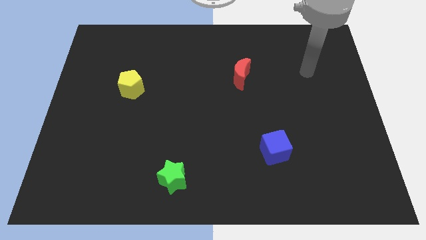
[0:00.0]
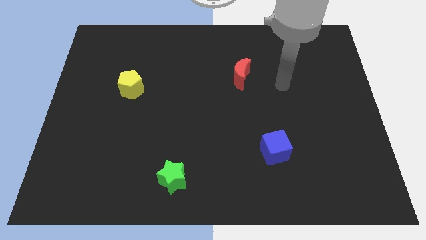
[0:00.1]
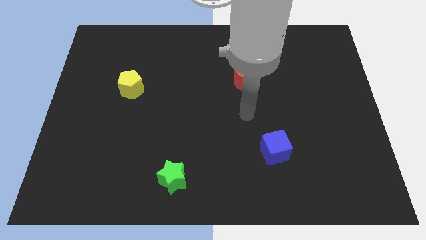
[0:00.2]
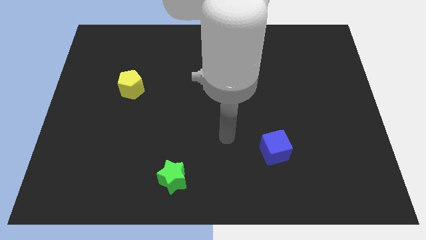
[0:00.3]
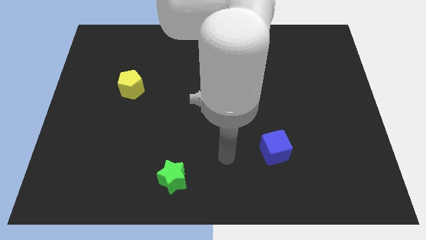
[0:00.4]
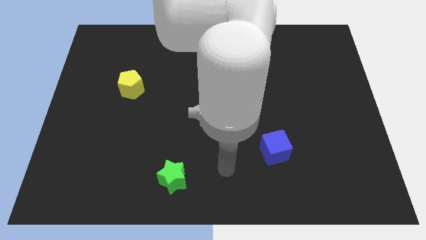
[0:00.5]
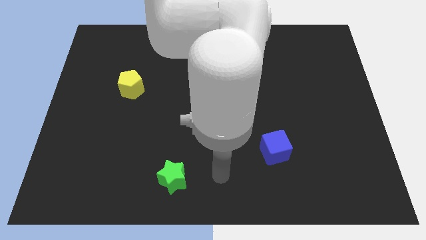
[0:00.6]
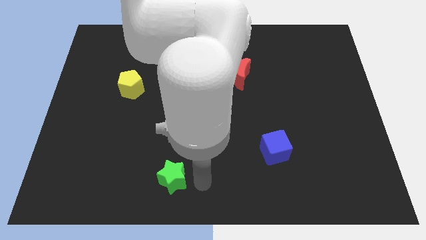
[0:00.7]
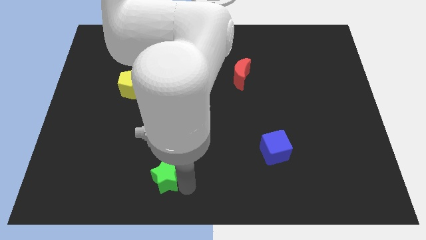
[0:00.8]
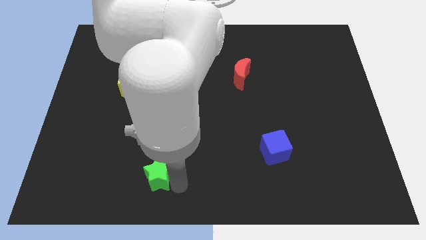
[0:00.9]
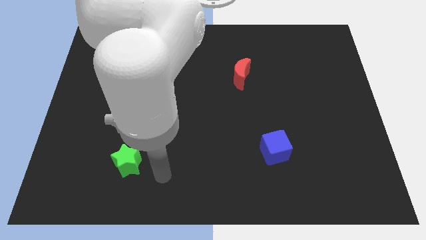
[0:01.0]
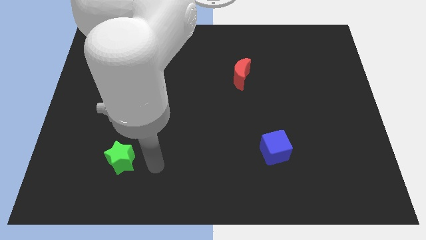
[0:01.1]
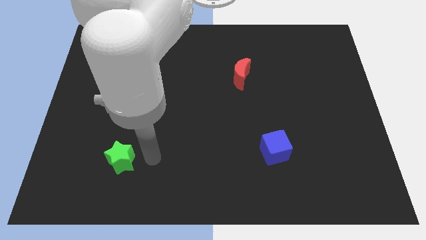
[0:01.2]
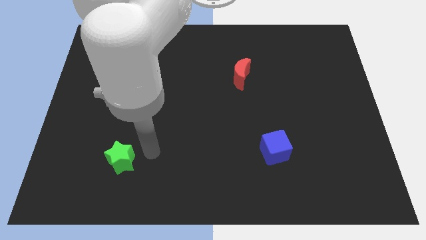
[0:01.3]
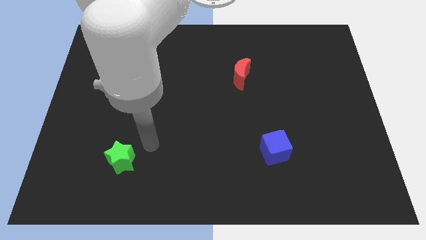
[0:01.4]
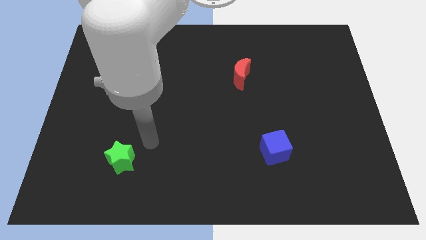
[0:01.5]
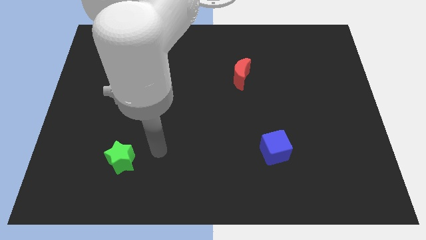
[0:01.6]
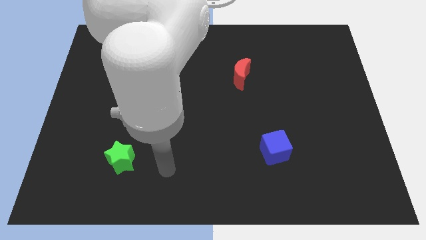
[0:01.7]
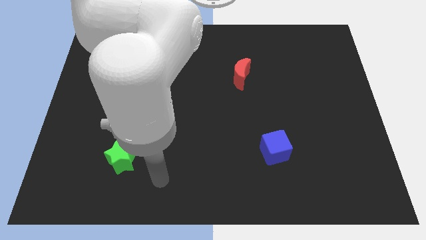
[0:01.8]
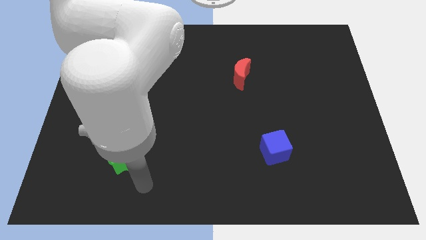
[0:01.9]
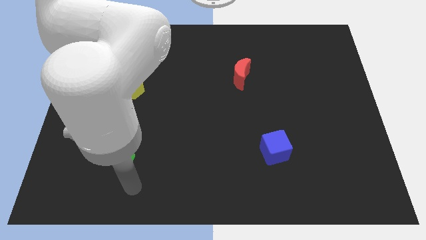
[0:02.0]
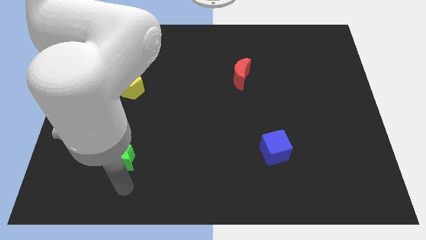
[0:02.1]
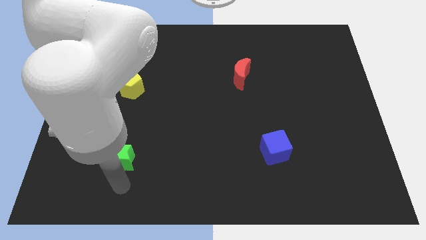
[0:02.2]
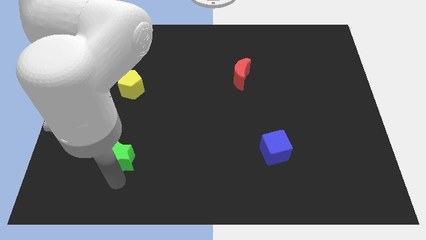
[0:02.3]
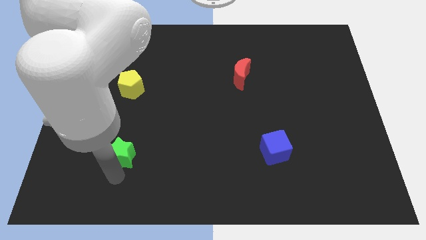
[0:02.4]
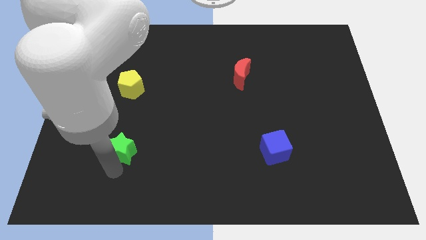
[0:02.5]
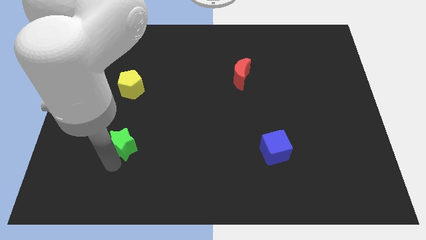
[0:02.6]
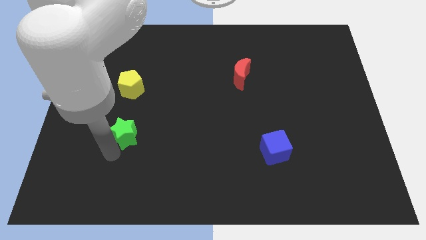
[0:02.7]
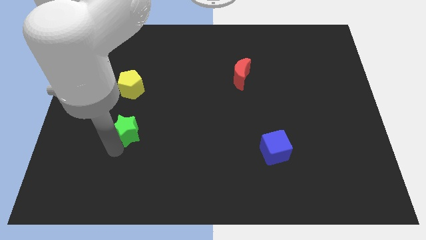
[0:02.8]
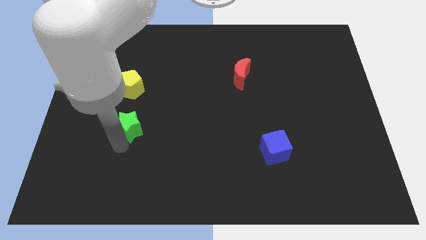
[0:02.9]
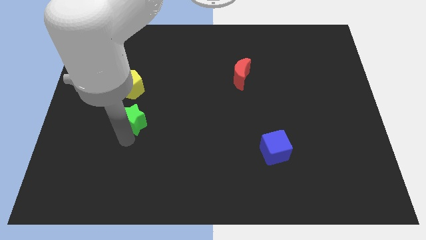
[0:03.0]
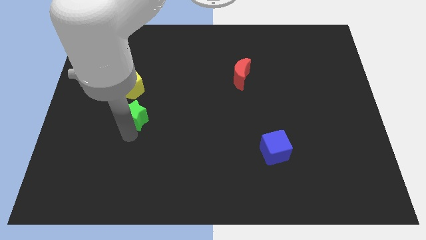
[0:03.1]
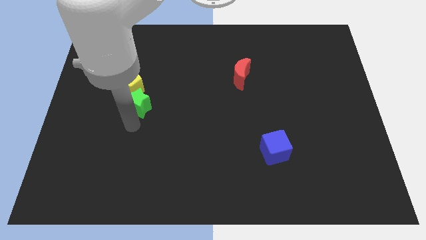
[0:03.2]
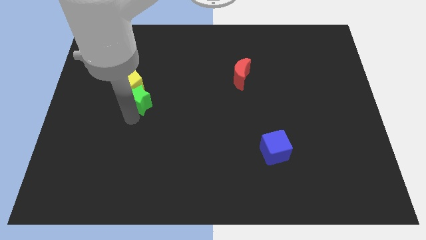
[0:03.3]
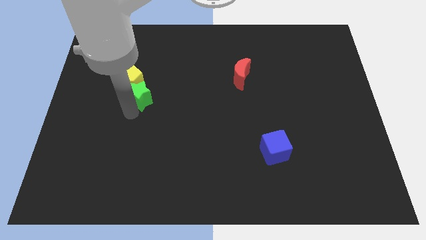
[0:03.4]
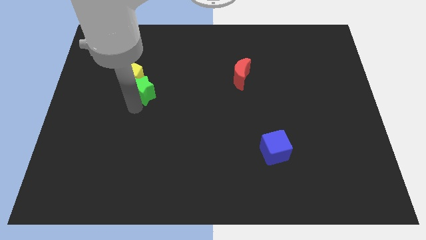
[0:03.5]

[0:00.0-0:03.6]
put the green star next to the pentagon

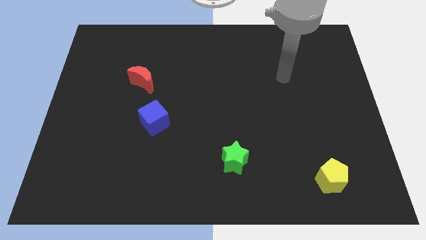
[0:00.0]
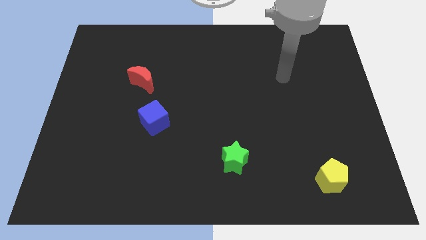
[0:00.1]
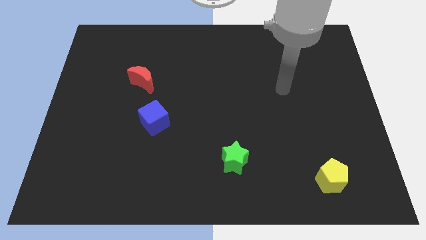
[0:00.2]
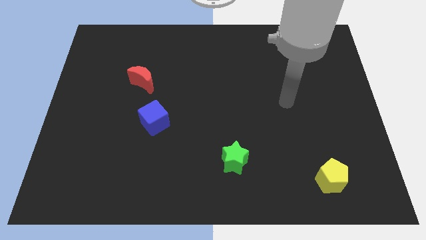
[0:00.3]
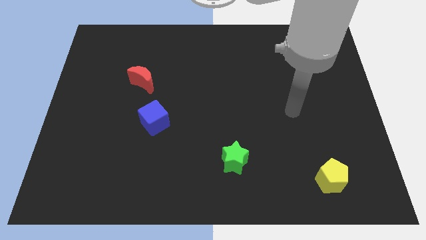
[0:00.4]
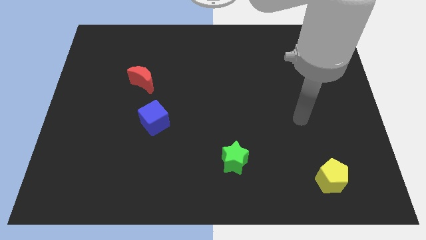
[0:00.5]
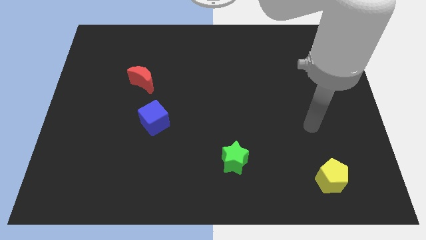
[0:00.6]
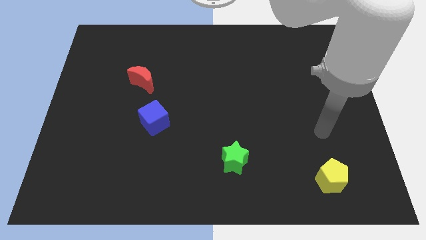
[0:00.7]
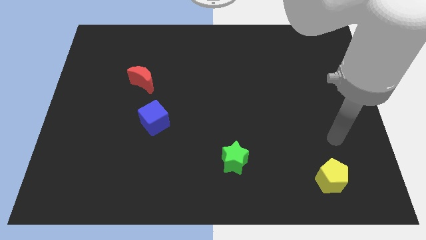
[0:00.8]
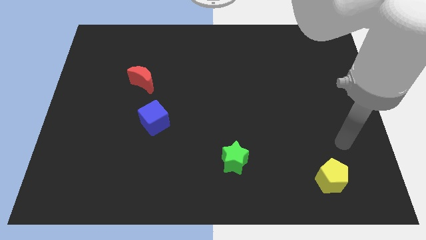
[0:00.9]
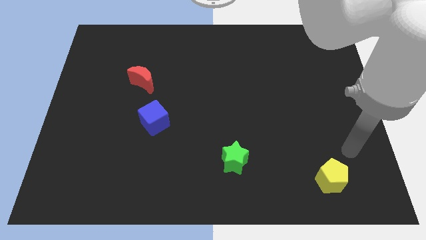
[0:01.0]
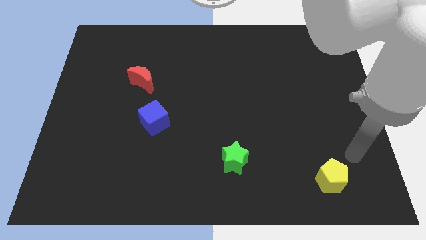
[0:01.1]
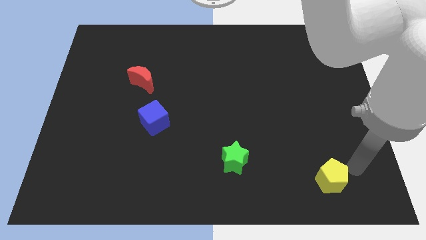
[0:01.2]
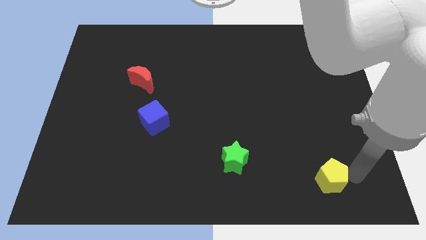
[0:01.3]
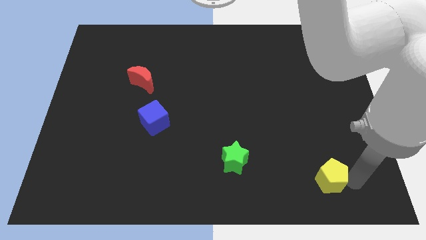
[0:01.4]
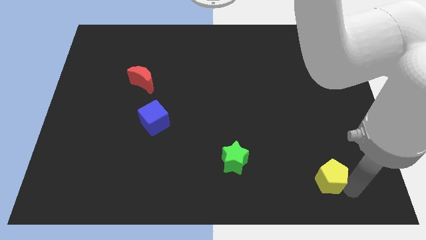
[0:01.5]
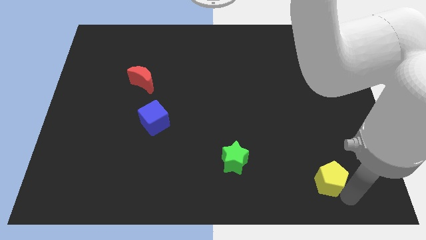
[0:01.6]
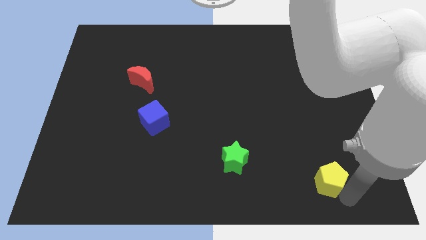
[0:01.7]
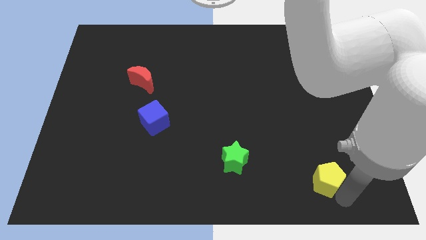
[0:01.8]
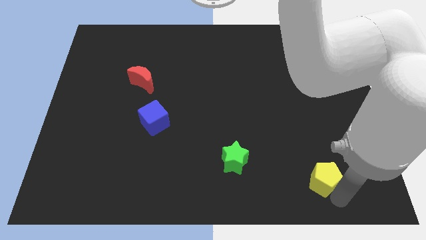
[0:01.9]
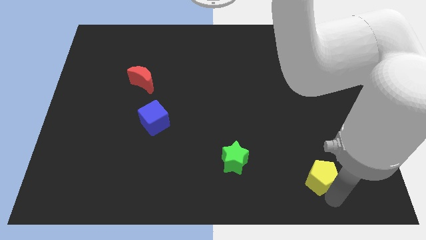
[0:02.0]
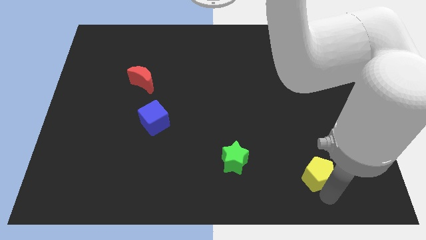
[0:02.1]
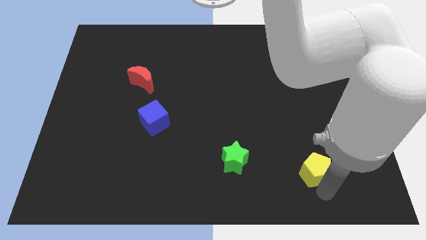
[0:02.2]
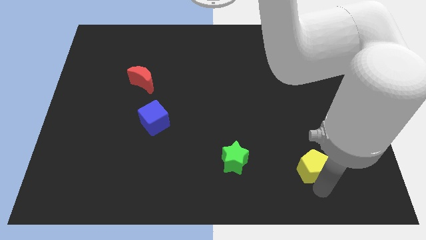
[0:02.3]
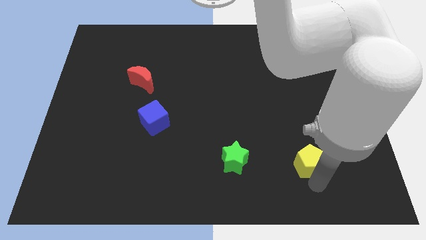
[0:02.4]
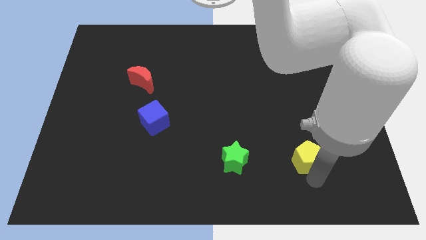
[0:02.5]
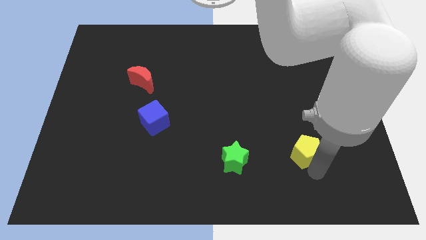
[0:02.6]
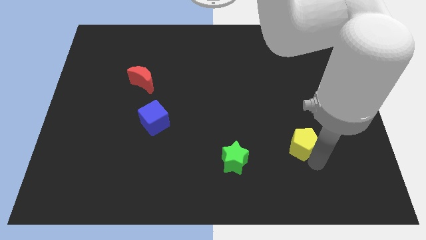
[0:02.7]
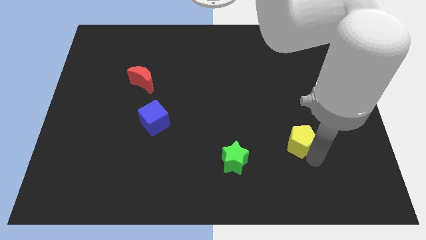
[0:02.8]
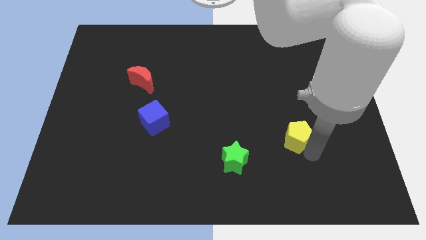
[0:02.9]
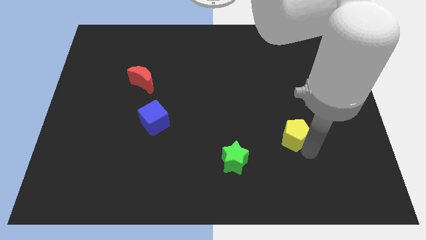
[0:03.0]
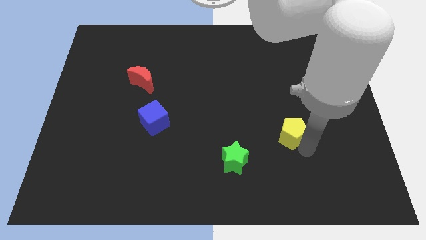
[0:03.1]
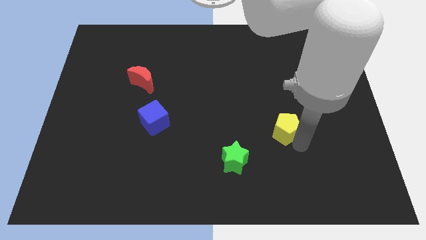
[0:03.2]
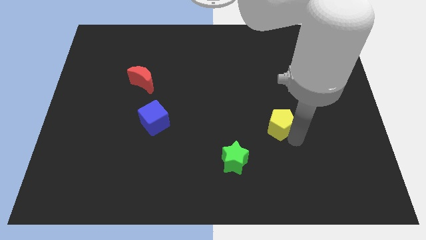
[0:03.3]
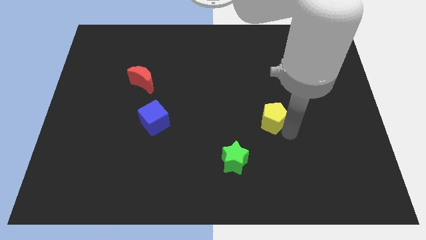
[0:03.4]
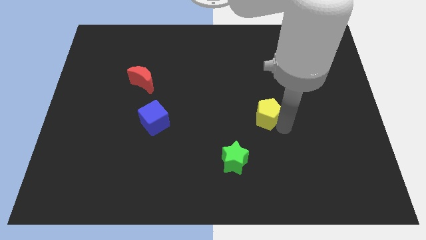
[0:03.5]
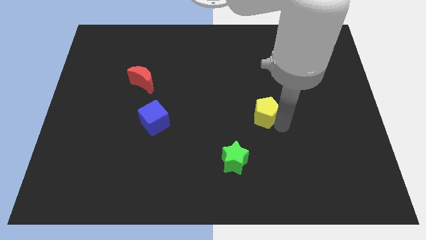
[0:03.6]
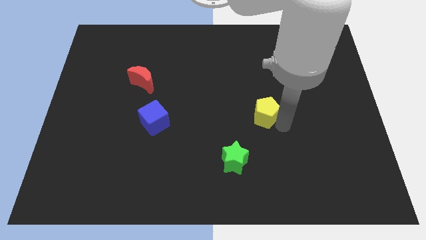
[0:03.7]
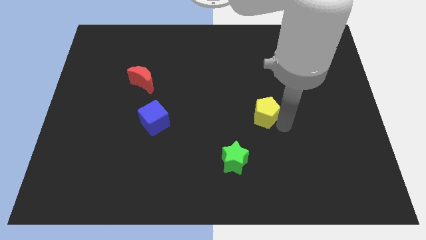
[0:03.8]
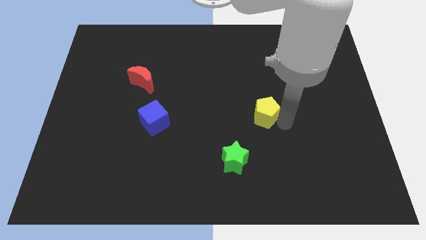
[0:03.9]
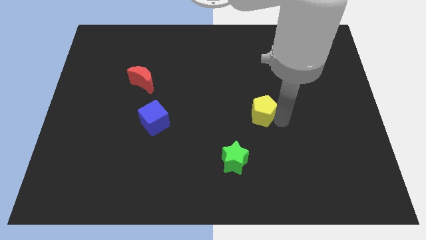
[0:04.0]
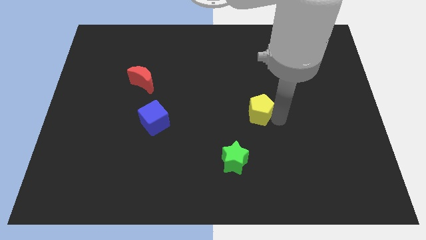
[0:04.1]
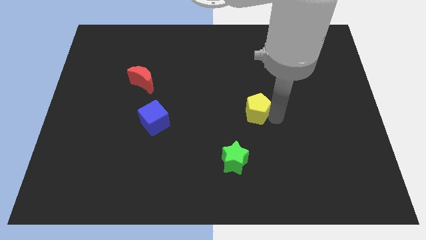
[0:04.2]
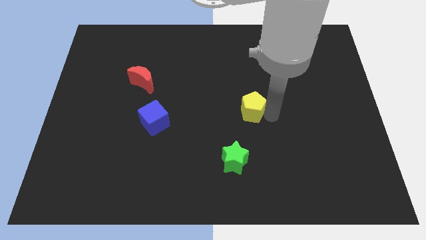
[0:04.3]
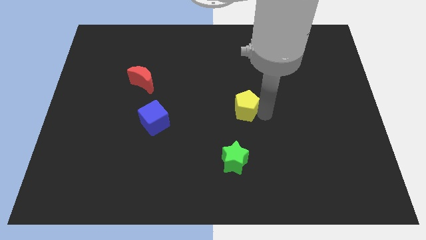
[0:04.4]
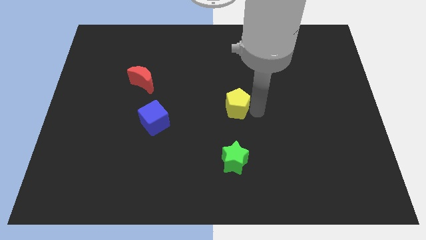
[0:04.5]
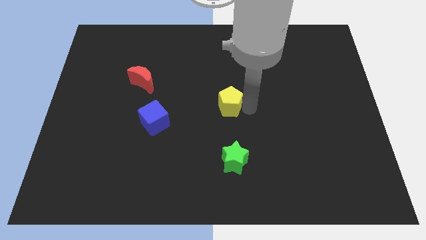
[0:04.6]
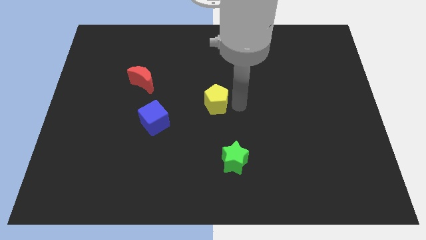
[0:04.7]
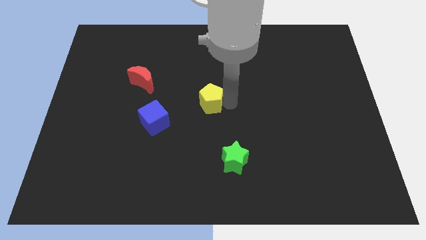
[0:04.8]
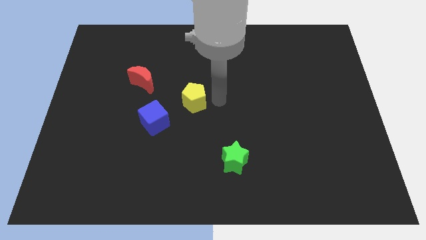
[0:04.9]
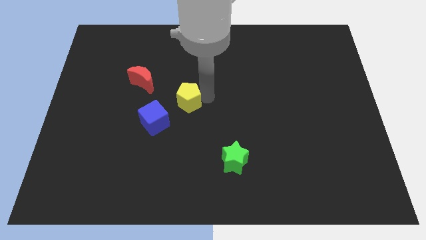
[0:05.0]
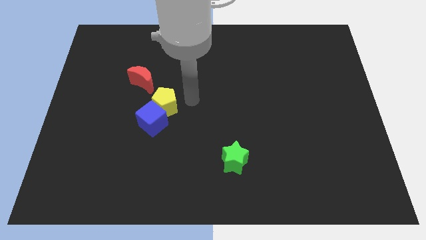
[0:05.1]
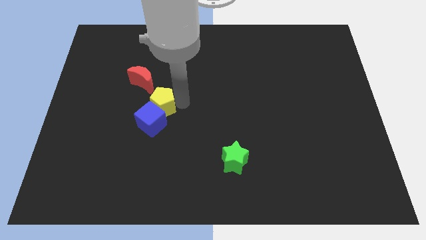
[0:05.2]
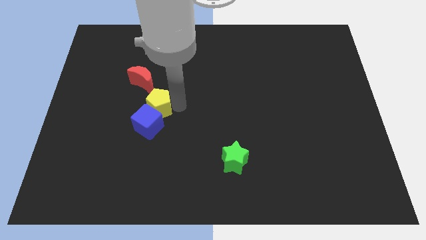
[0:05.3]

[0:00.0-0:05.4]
move the yellow block to the blue cube
